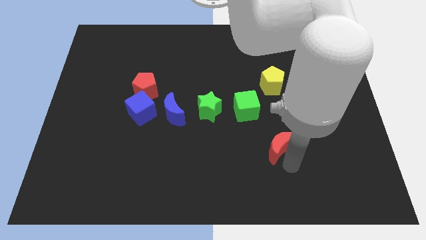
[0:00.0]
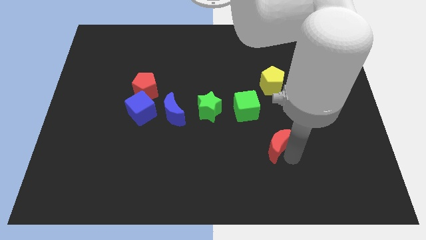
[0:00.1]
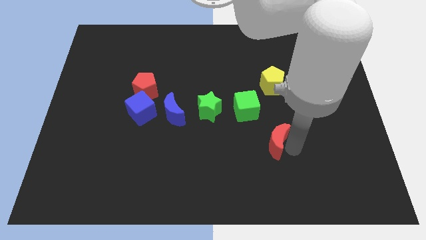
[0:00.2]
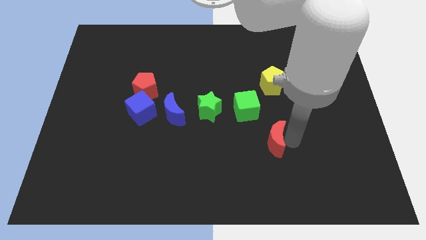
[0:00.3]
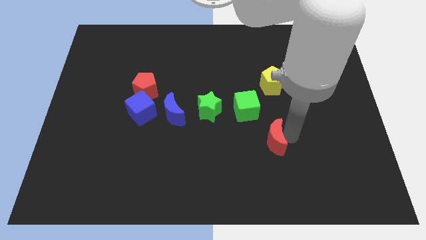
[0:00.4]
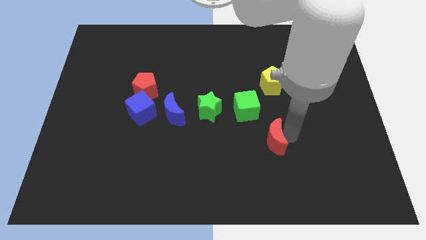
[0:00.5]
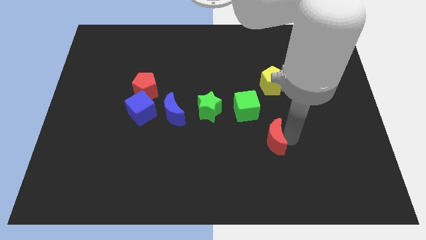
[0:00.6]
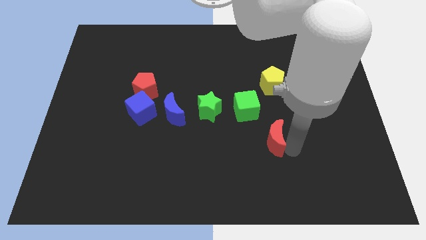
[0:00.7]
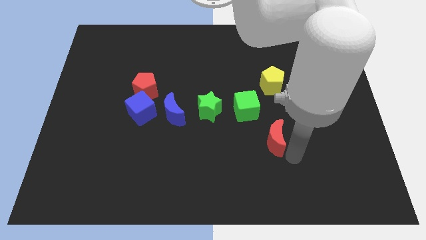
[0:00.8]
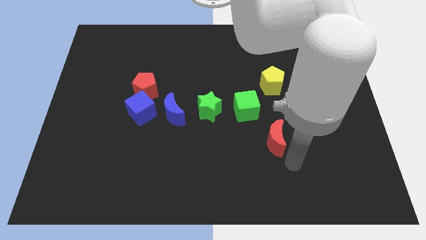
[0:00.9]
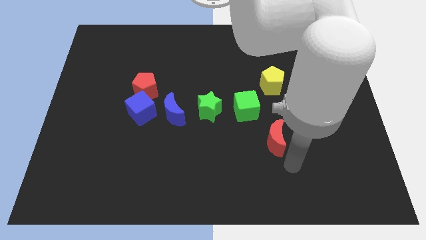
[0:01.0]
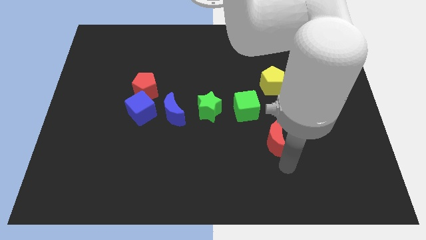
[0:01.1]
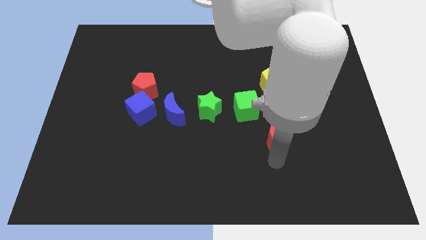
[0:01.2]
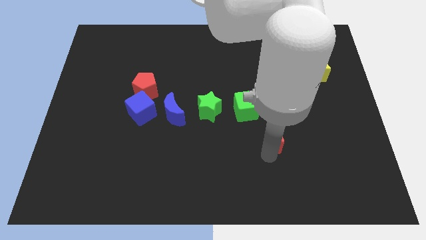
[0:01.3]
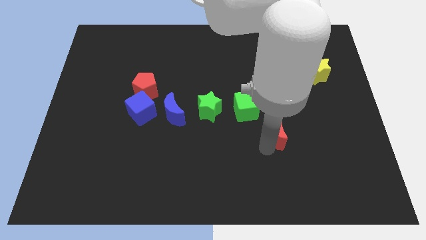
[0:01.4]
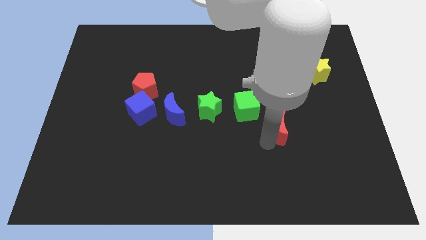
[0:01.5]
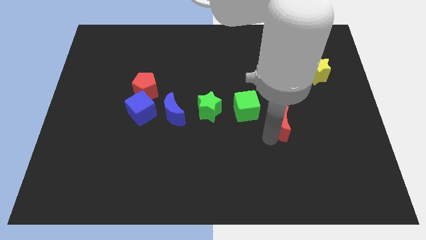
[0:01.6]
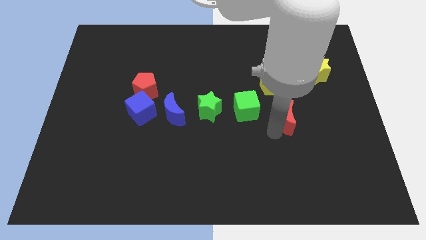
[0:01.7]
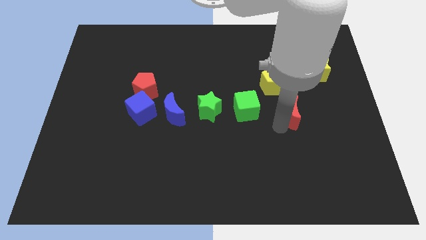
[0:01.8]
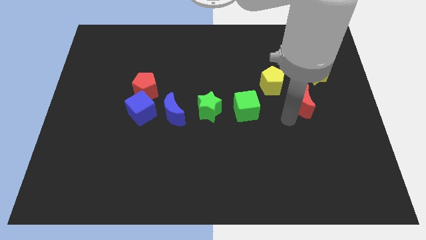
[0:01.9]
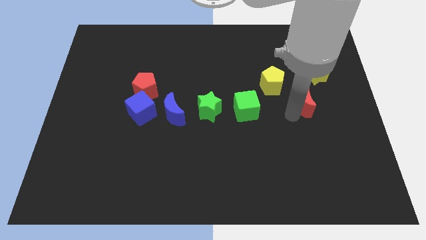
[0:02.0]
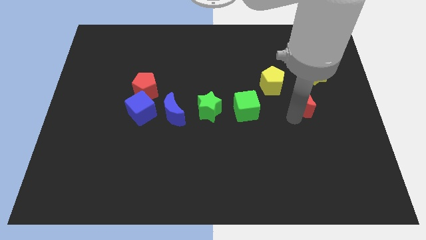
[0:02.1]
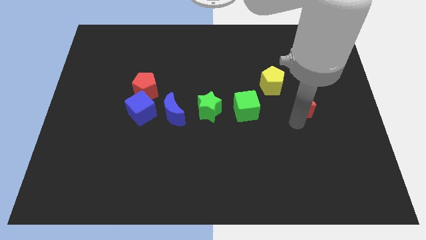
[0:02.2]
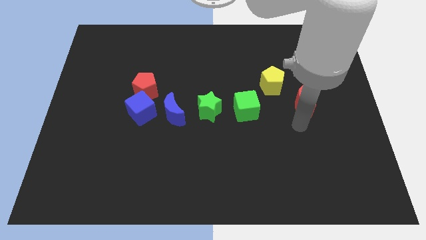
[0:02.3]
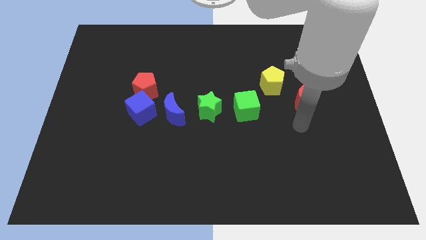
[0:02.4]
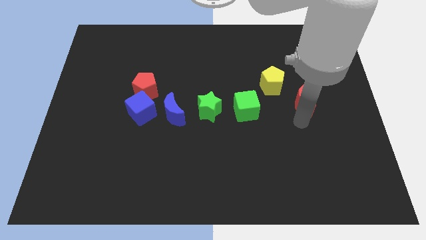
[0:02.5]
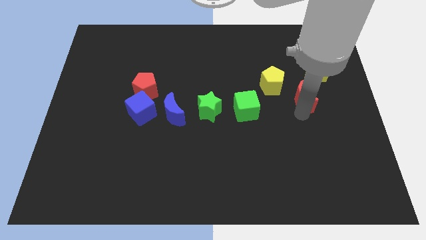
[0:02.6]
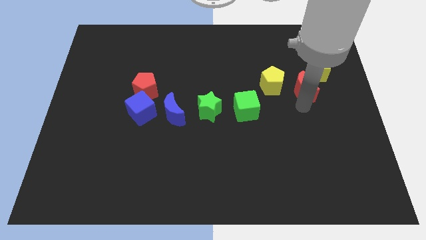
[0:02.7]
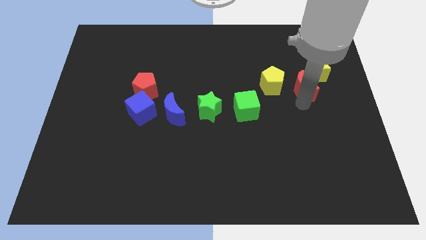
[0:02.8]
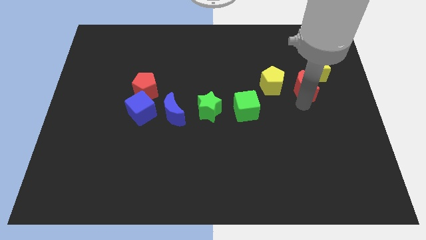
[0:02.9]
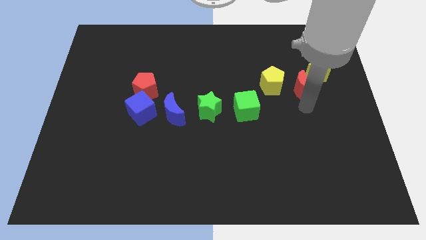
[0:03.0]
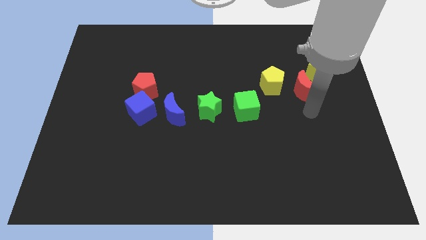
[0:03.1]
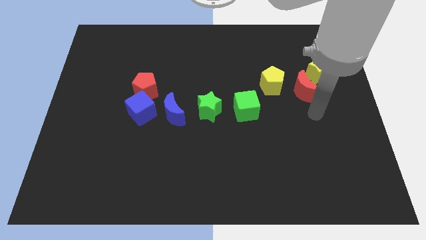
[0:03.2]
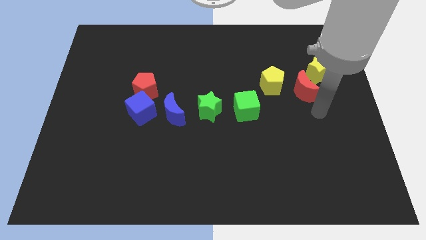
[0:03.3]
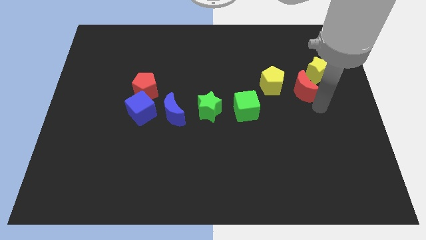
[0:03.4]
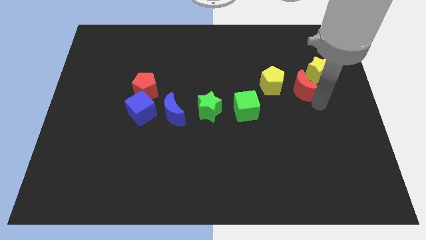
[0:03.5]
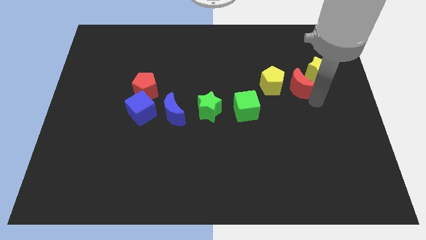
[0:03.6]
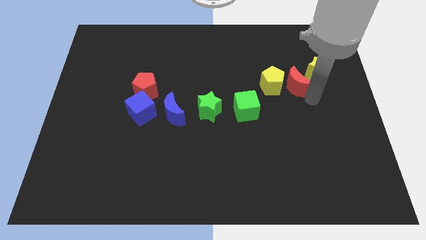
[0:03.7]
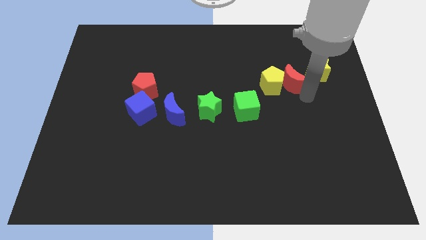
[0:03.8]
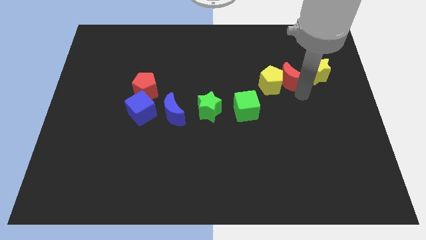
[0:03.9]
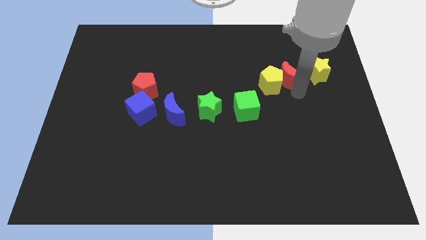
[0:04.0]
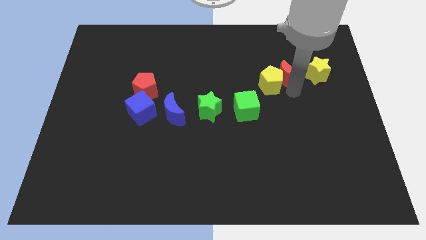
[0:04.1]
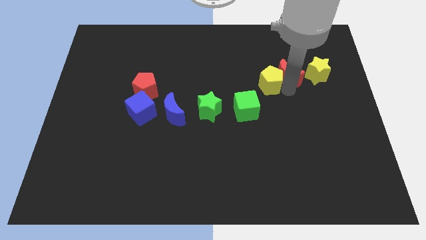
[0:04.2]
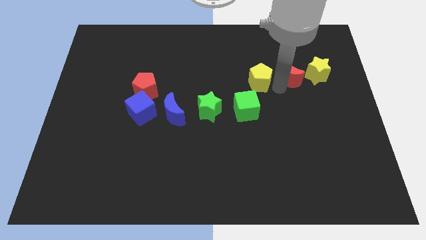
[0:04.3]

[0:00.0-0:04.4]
move the red moon between the two yellow blocks

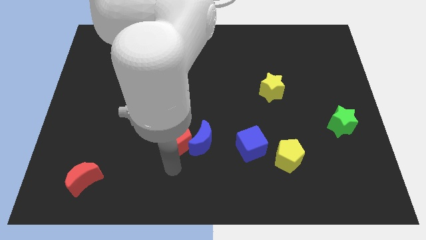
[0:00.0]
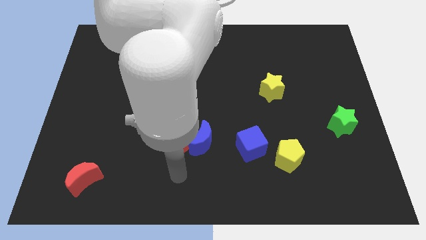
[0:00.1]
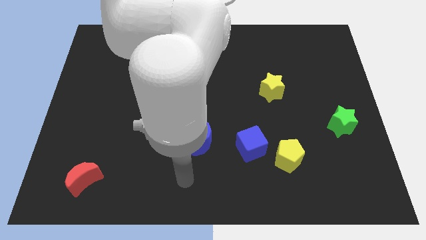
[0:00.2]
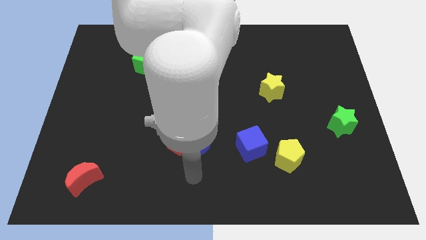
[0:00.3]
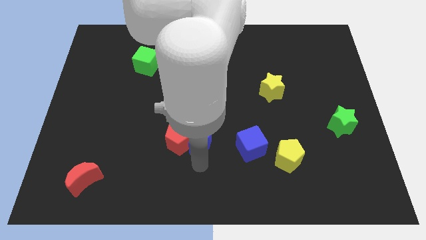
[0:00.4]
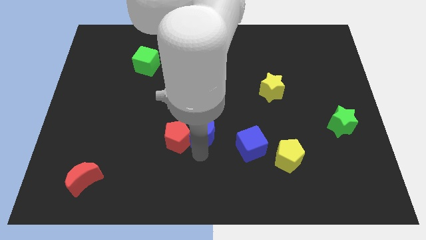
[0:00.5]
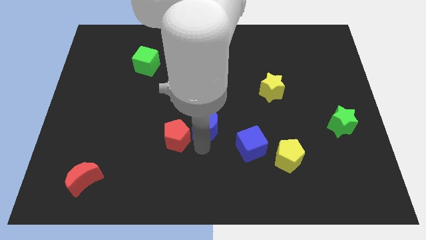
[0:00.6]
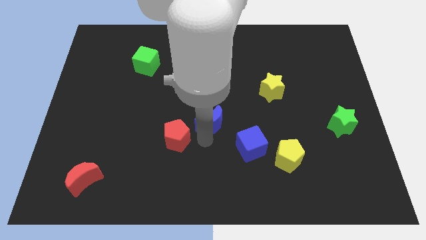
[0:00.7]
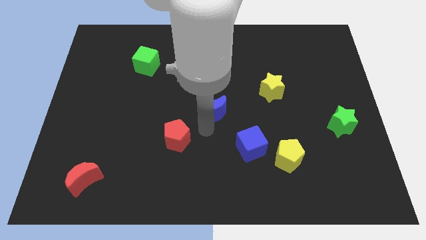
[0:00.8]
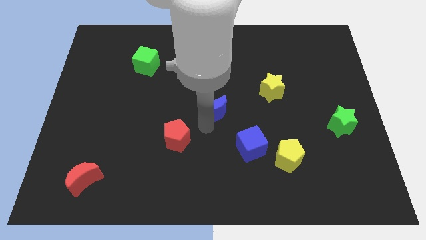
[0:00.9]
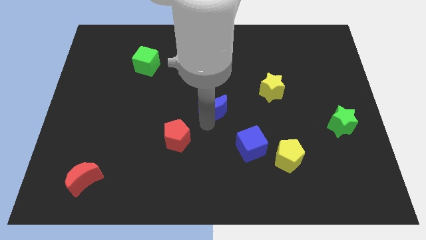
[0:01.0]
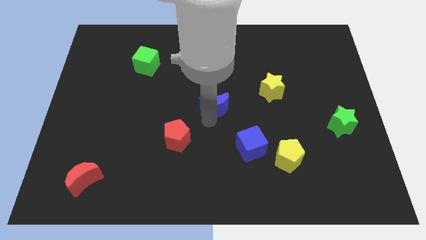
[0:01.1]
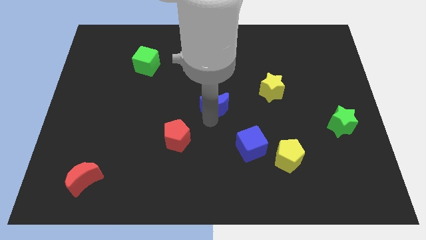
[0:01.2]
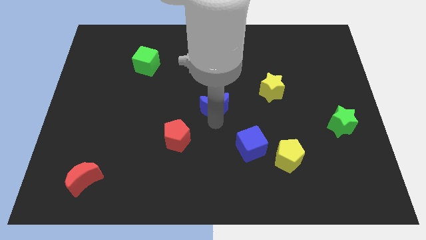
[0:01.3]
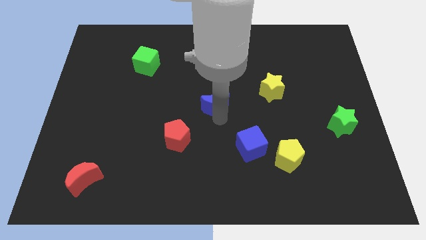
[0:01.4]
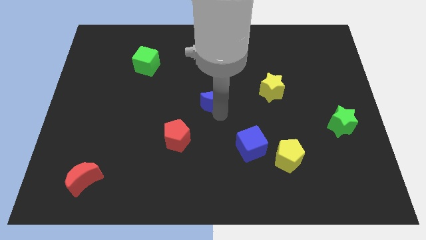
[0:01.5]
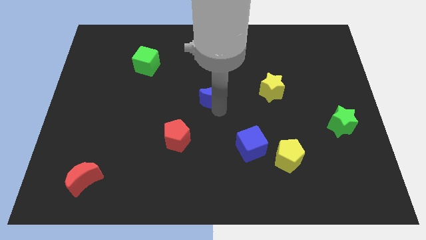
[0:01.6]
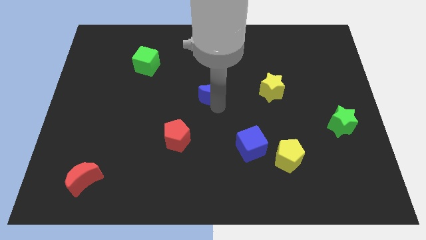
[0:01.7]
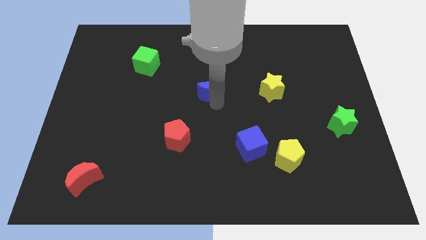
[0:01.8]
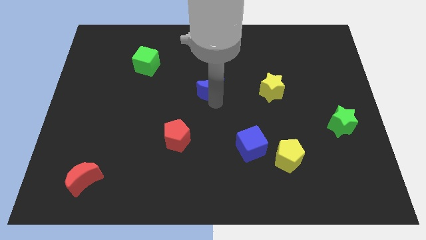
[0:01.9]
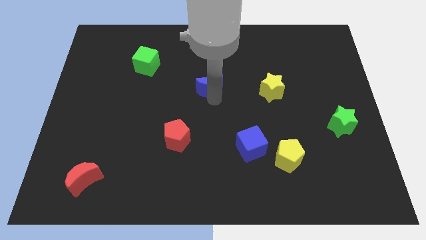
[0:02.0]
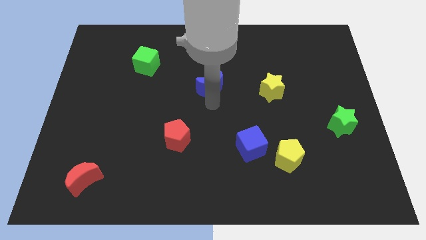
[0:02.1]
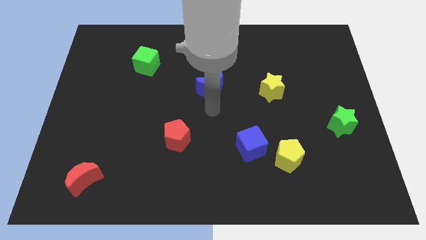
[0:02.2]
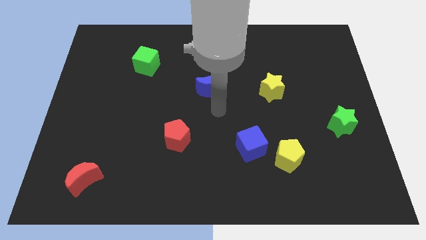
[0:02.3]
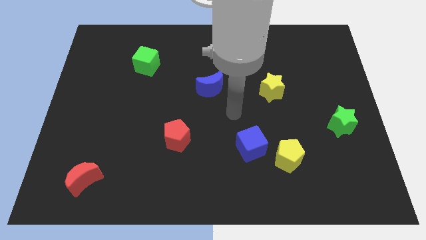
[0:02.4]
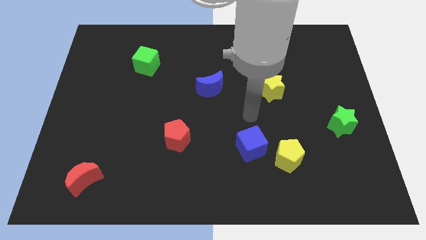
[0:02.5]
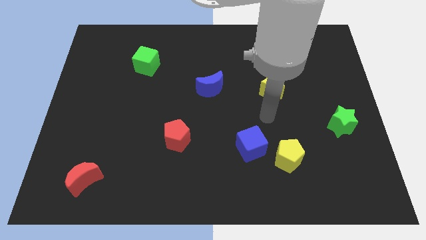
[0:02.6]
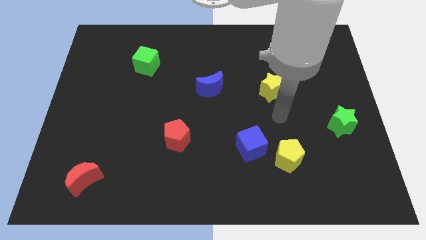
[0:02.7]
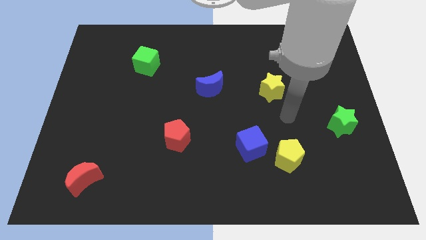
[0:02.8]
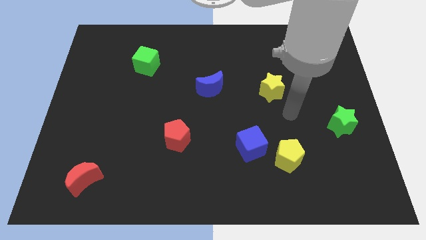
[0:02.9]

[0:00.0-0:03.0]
push the blue crescent towards the center of the board

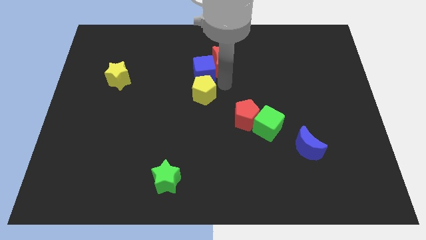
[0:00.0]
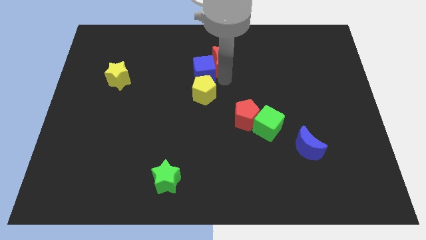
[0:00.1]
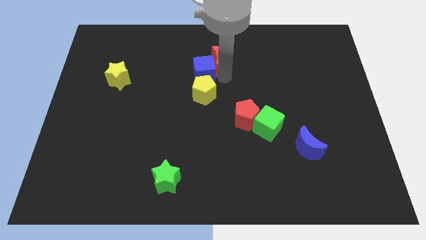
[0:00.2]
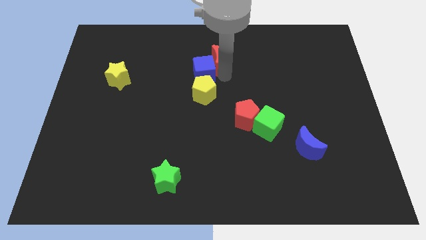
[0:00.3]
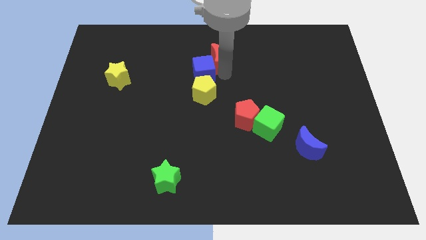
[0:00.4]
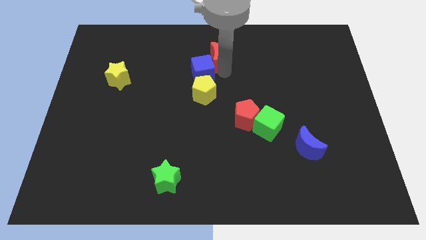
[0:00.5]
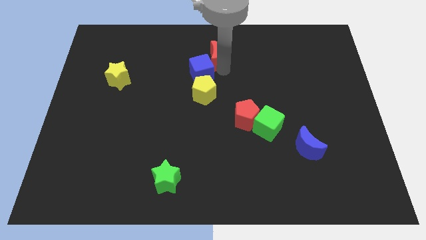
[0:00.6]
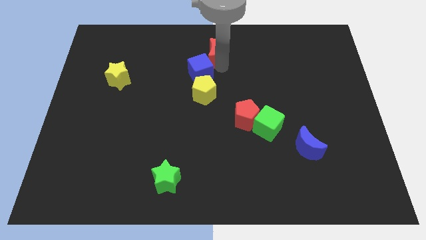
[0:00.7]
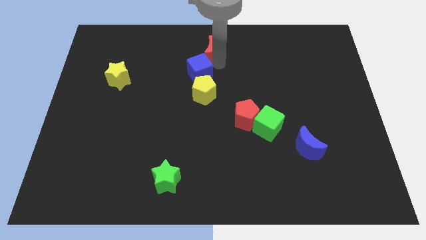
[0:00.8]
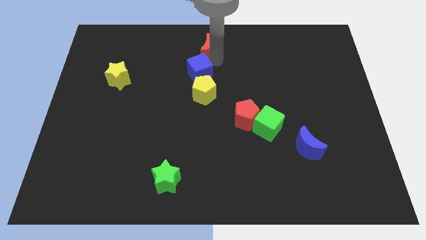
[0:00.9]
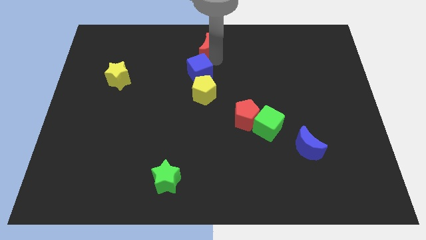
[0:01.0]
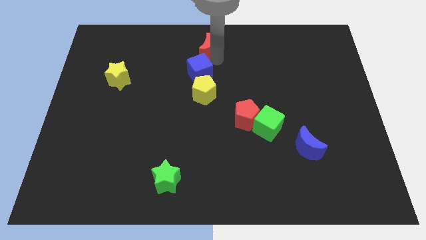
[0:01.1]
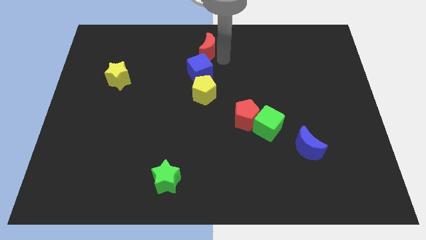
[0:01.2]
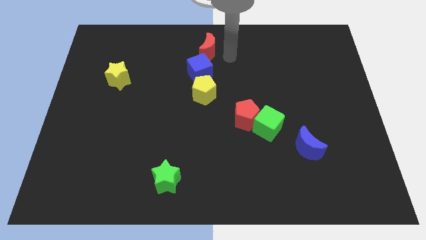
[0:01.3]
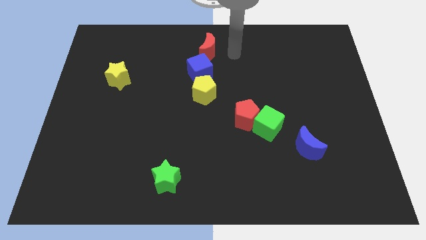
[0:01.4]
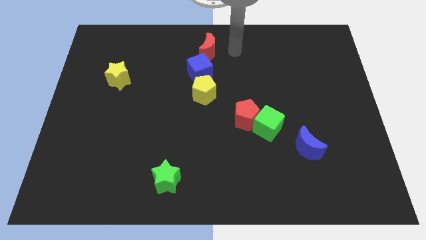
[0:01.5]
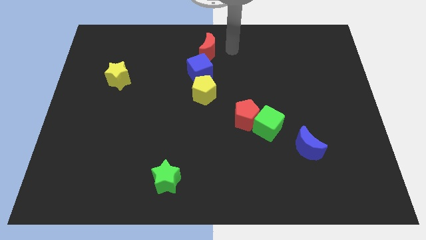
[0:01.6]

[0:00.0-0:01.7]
slide the red crescent to the top side of the blue cube
